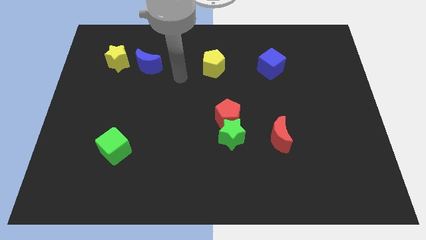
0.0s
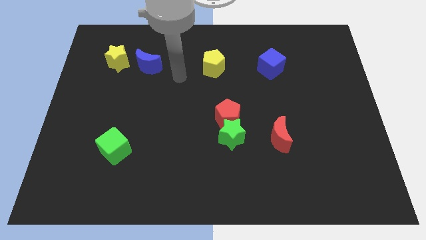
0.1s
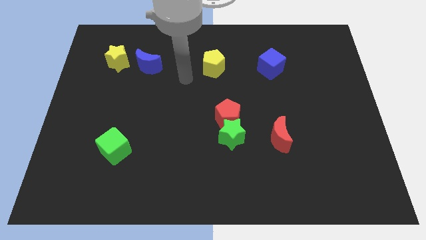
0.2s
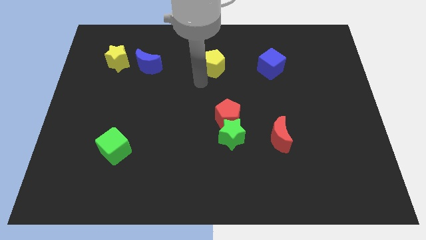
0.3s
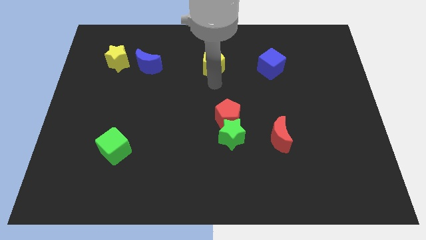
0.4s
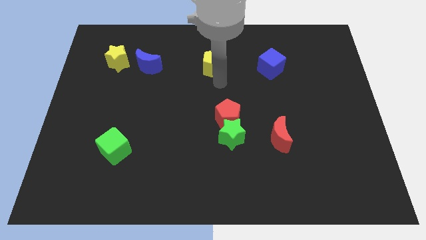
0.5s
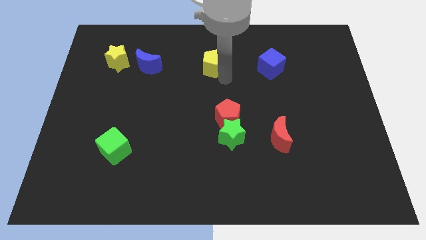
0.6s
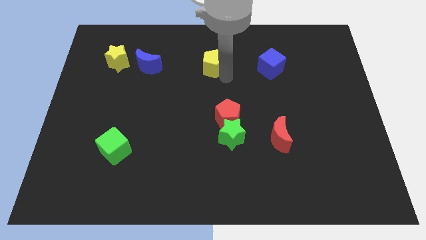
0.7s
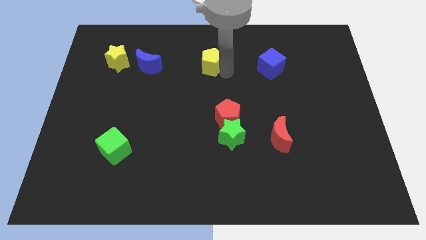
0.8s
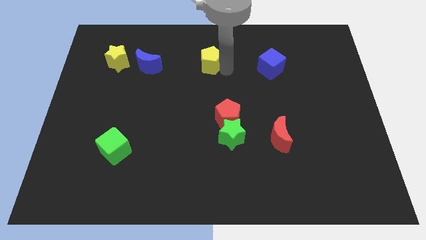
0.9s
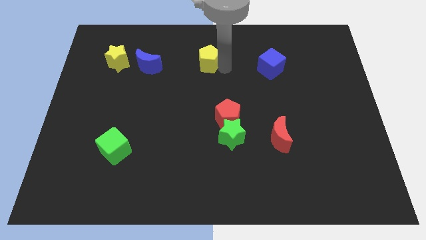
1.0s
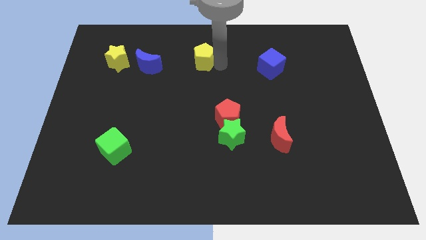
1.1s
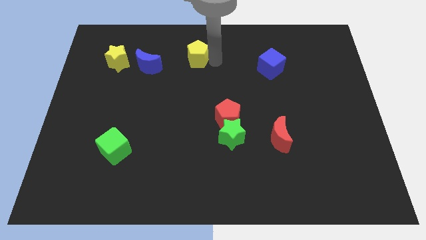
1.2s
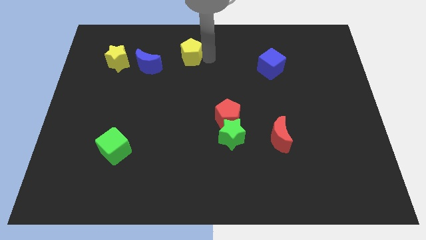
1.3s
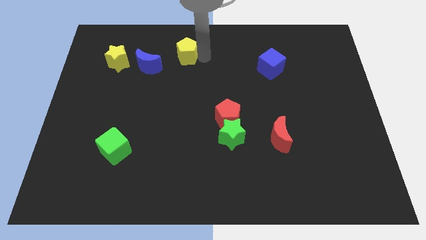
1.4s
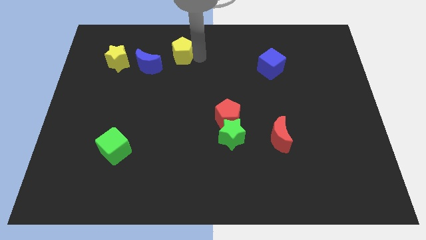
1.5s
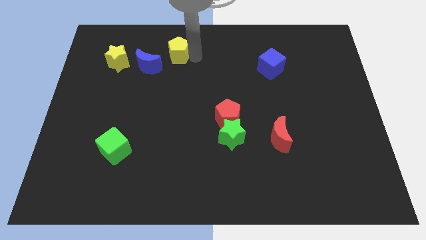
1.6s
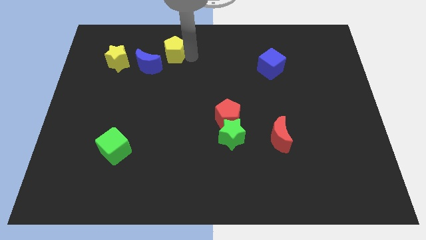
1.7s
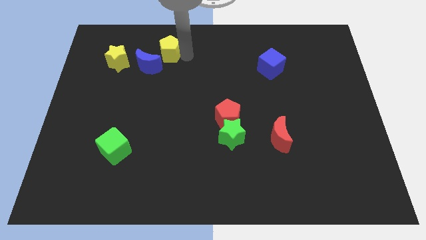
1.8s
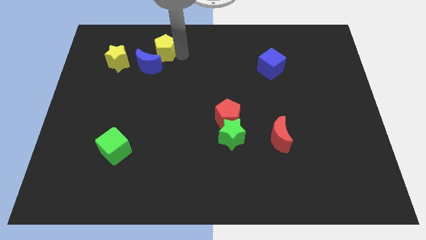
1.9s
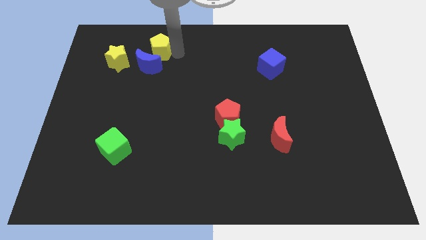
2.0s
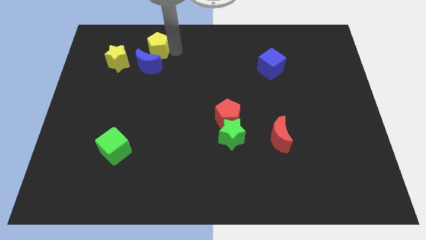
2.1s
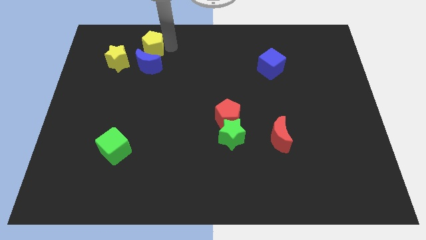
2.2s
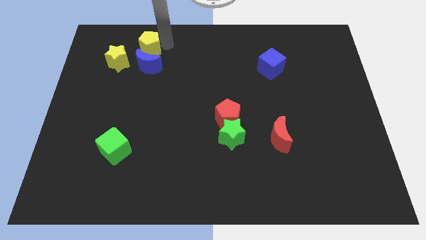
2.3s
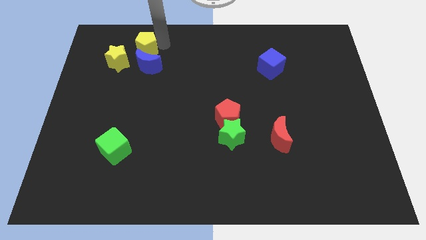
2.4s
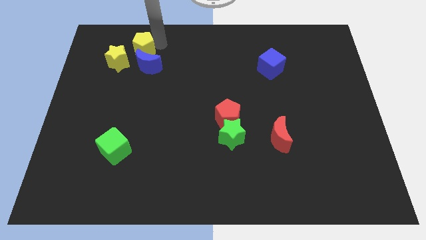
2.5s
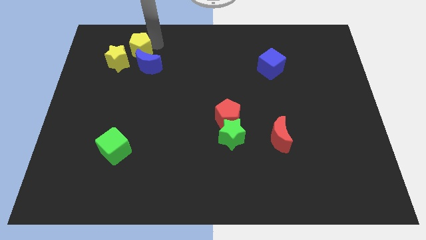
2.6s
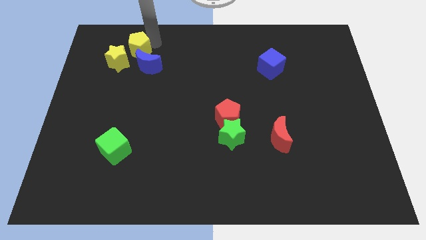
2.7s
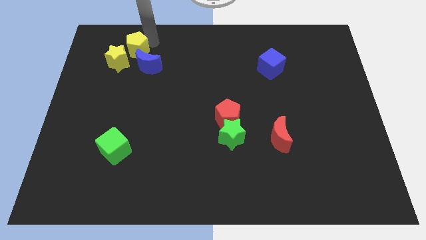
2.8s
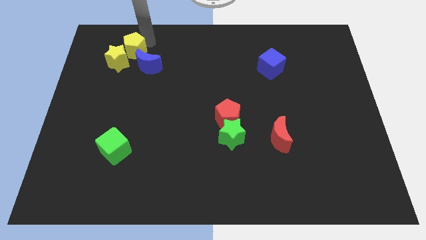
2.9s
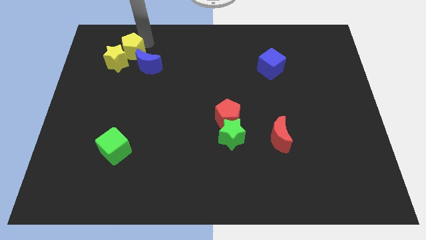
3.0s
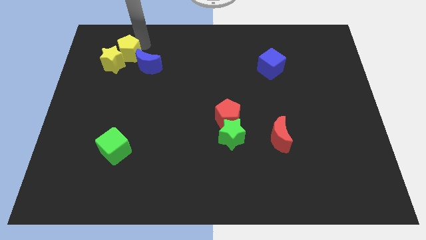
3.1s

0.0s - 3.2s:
slide the yellow pentagon towards the yellow star

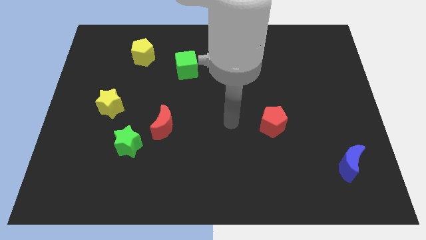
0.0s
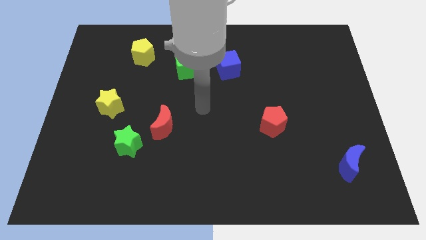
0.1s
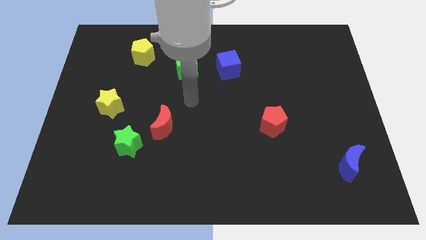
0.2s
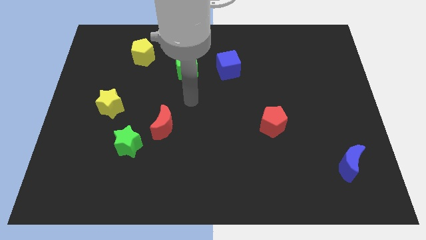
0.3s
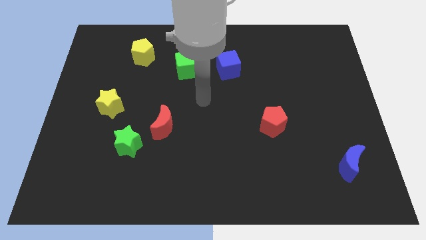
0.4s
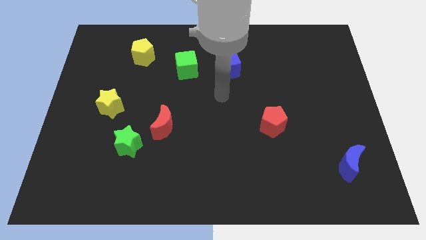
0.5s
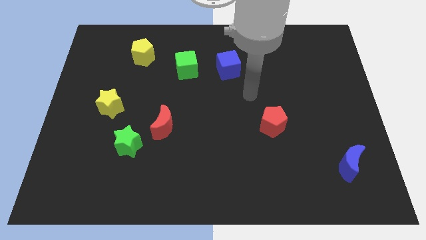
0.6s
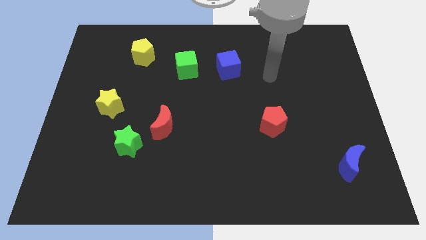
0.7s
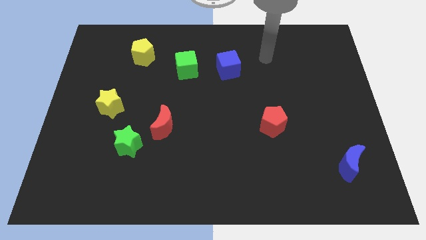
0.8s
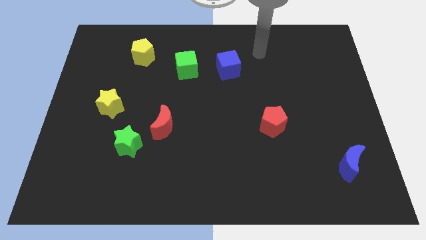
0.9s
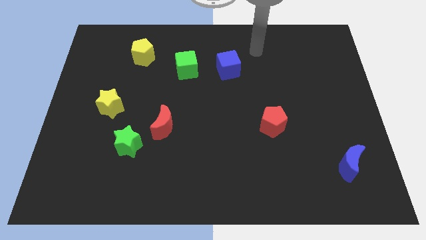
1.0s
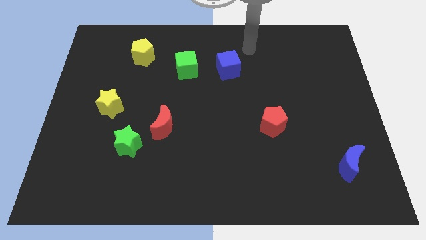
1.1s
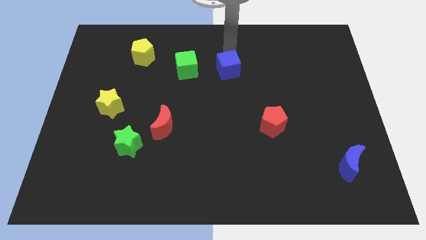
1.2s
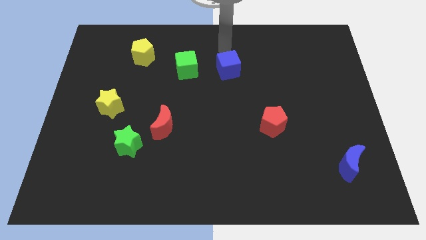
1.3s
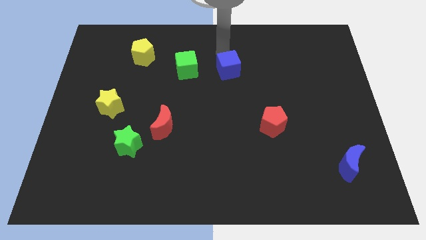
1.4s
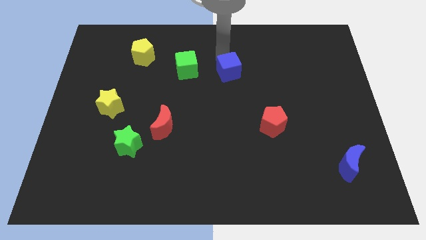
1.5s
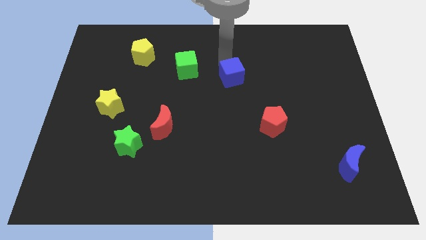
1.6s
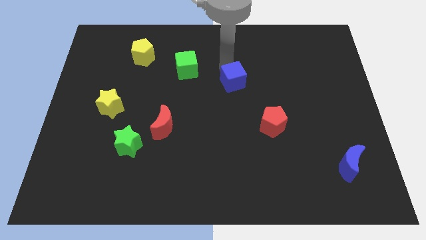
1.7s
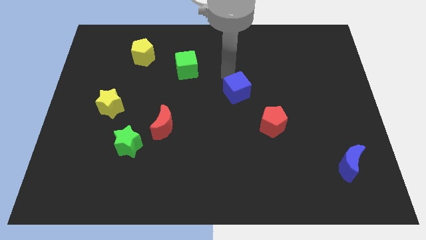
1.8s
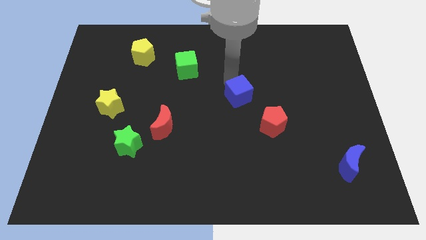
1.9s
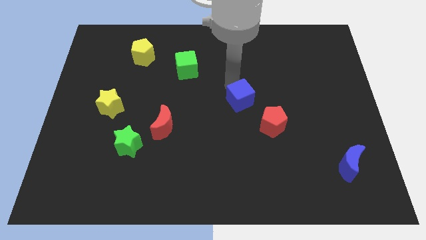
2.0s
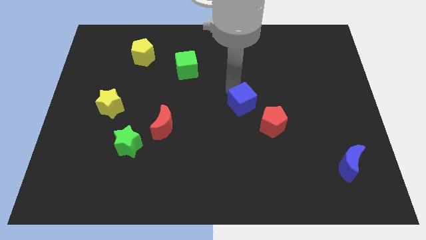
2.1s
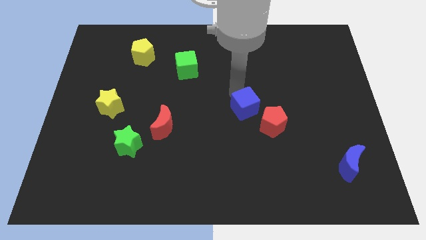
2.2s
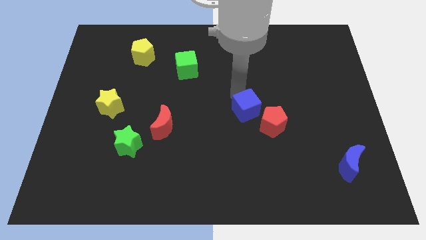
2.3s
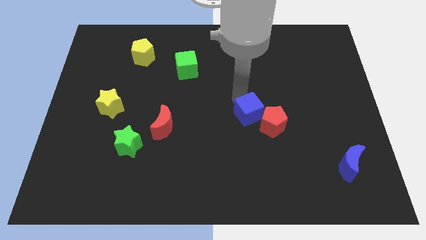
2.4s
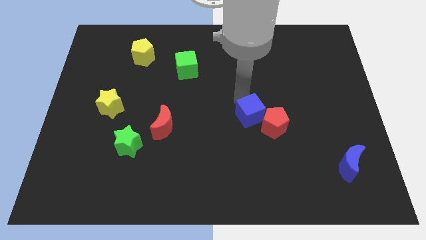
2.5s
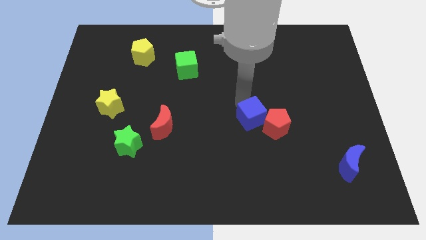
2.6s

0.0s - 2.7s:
slide the blue cube close to the red pentagon

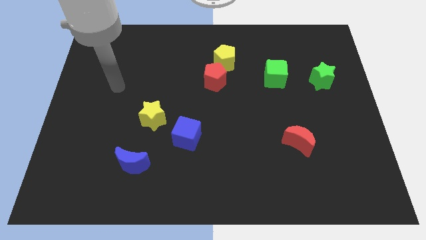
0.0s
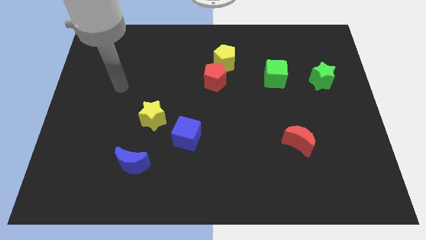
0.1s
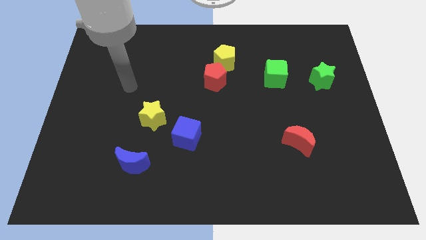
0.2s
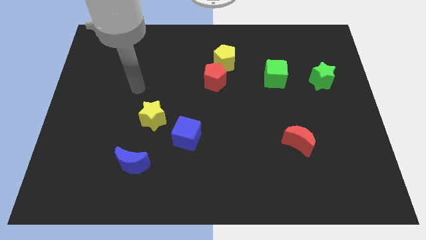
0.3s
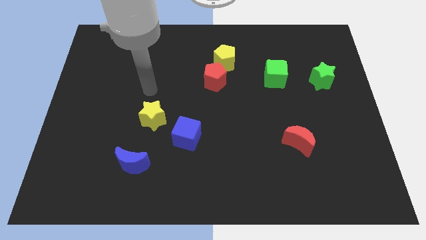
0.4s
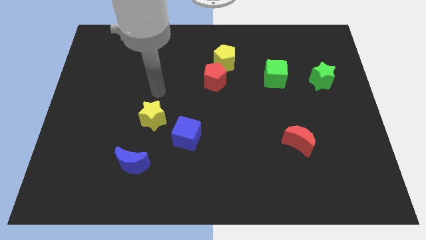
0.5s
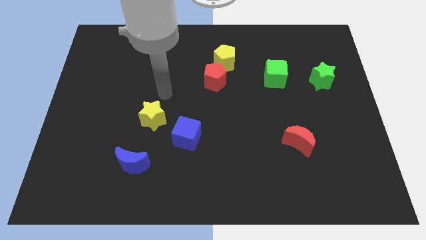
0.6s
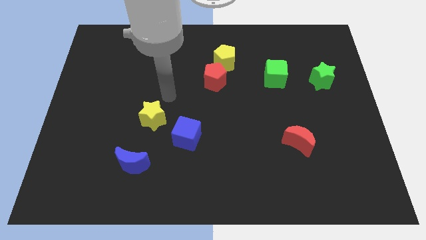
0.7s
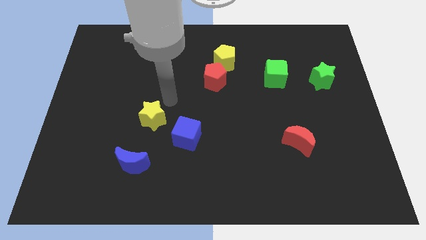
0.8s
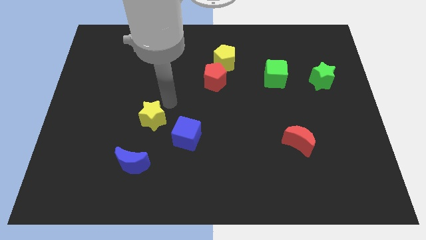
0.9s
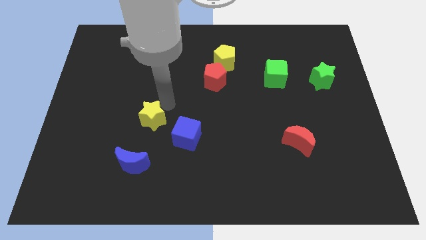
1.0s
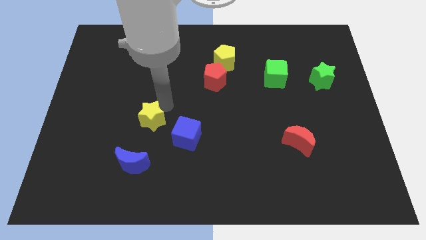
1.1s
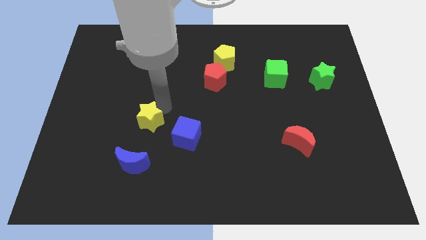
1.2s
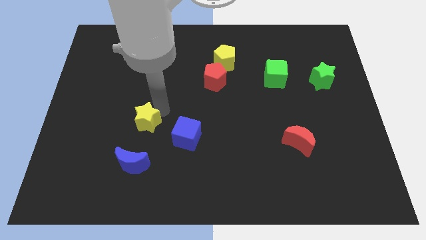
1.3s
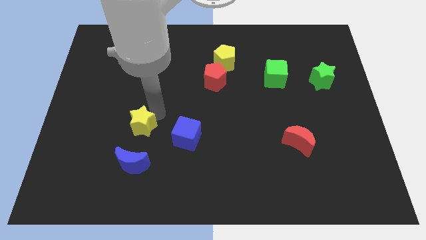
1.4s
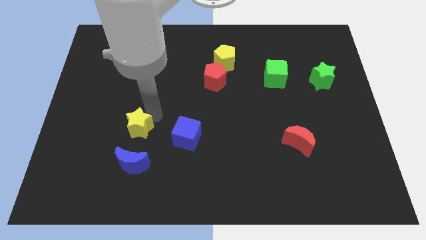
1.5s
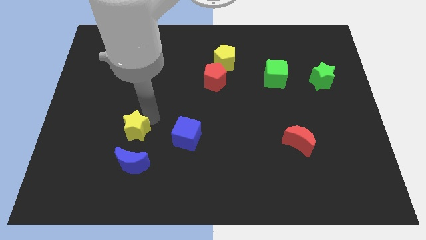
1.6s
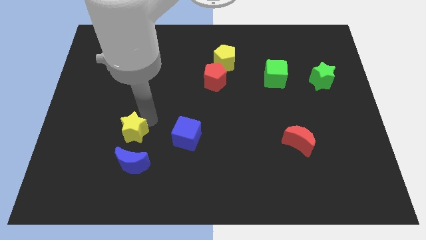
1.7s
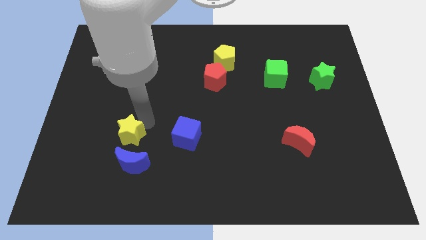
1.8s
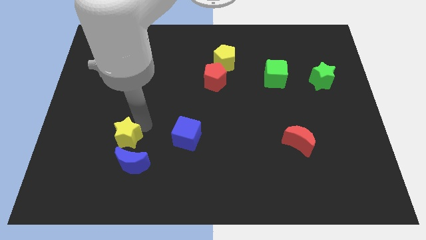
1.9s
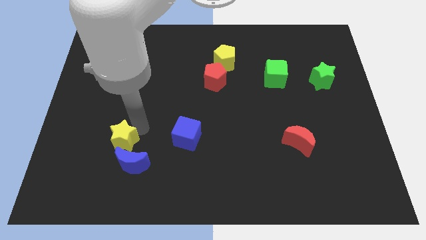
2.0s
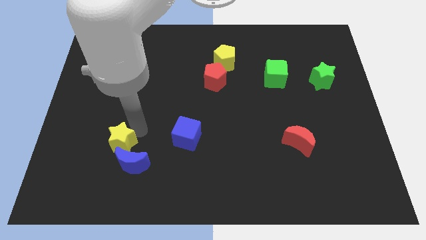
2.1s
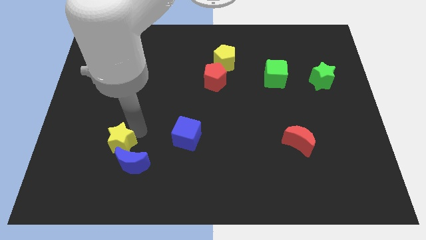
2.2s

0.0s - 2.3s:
slide the yellow star close to the blue moon

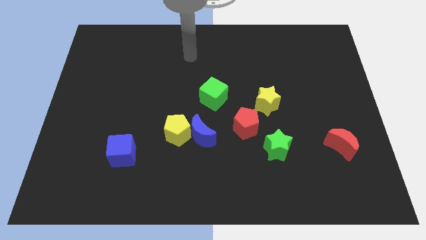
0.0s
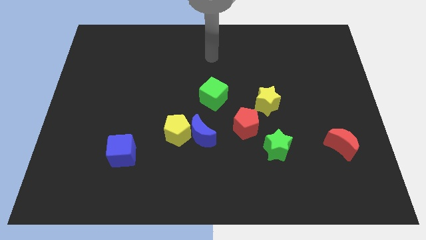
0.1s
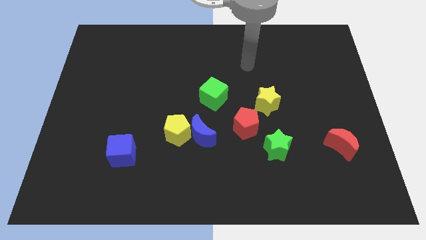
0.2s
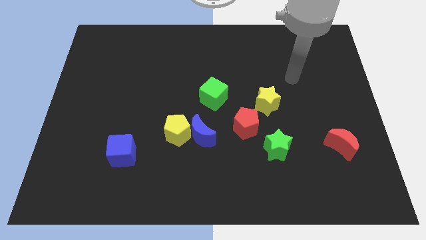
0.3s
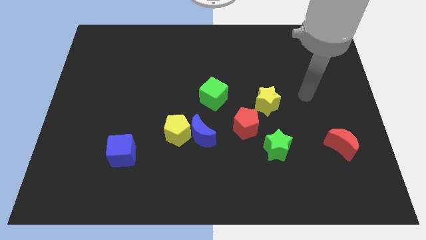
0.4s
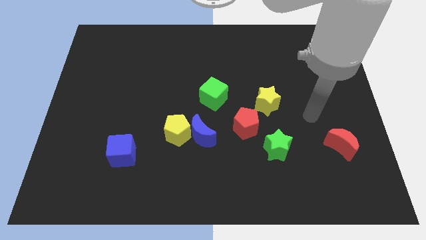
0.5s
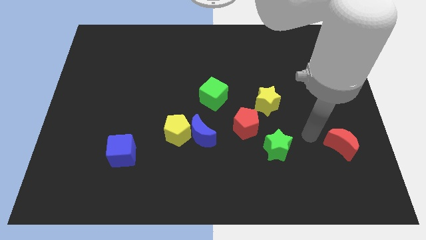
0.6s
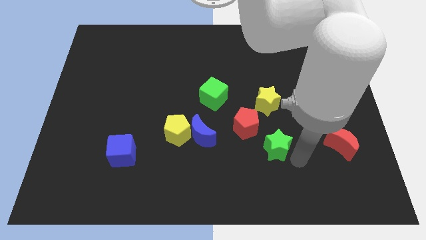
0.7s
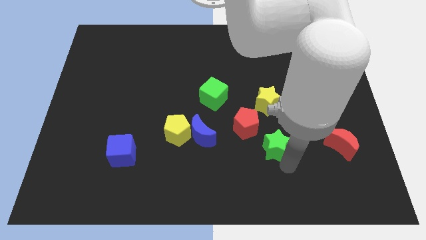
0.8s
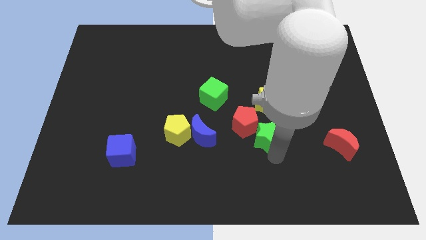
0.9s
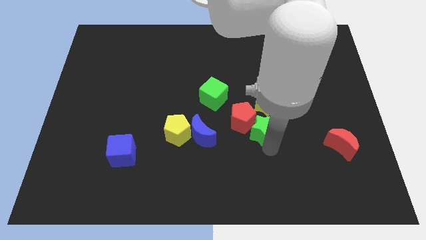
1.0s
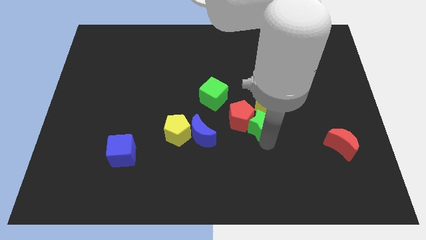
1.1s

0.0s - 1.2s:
move the green star towards the red pentagon
